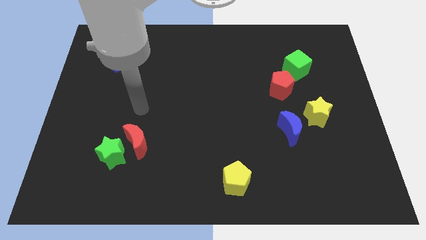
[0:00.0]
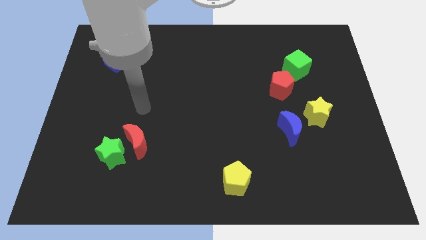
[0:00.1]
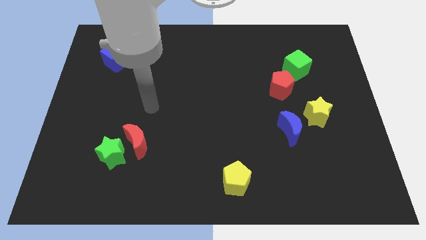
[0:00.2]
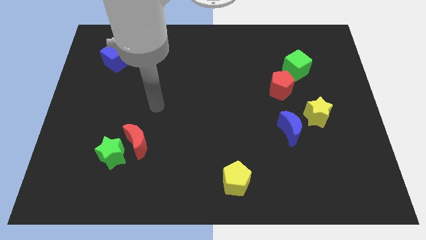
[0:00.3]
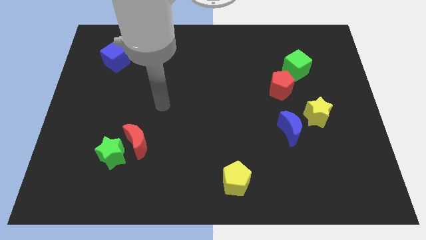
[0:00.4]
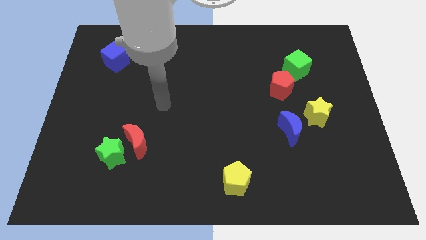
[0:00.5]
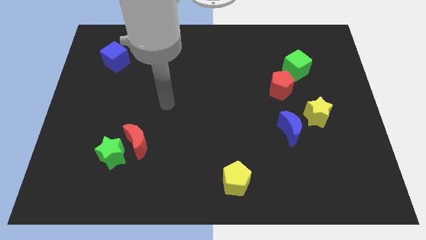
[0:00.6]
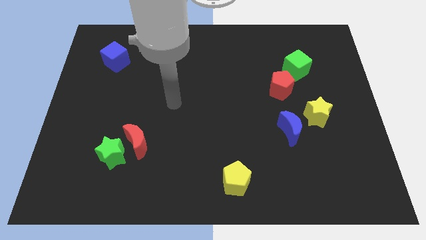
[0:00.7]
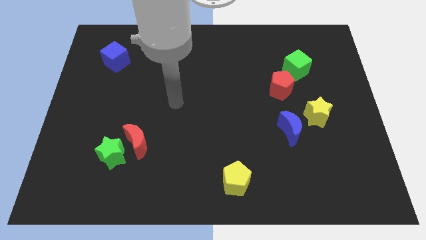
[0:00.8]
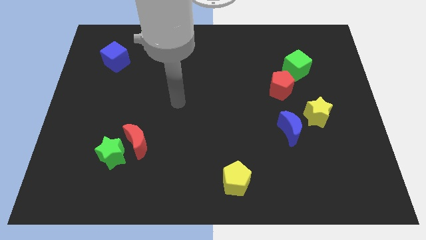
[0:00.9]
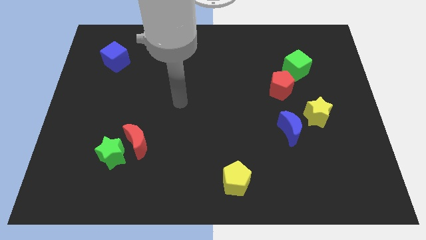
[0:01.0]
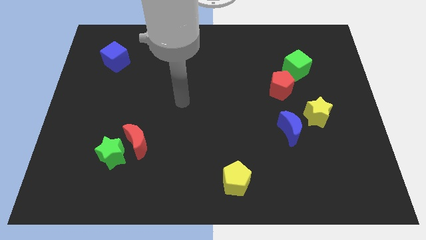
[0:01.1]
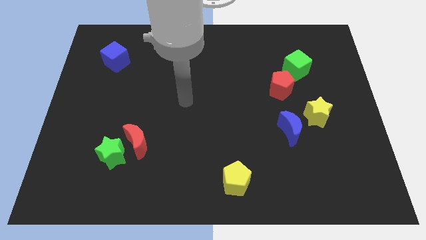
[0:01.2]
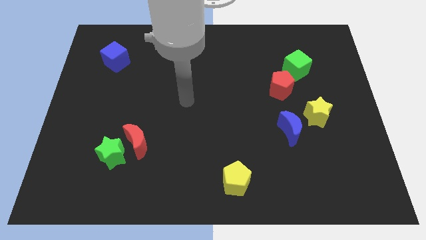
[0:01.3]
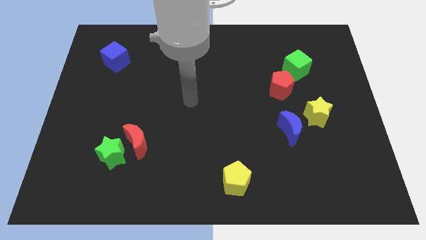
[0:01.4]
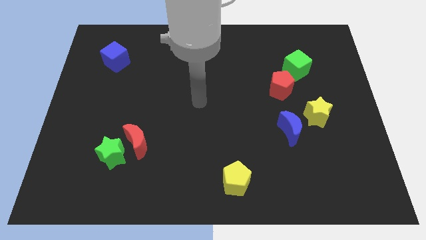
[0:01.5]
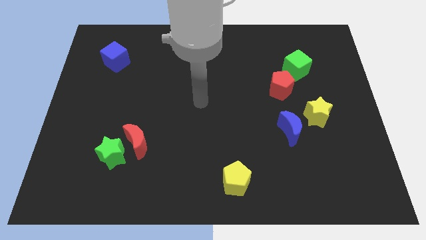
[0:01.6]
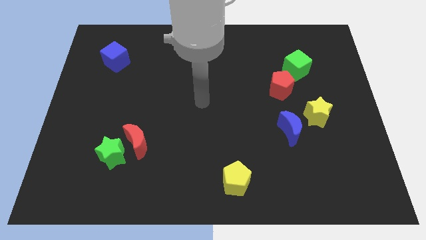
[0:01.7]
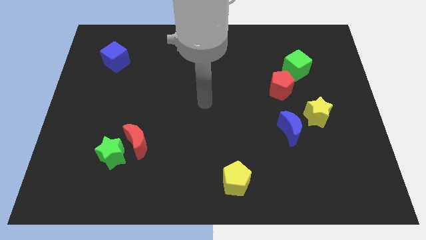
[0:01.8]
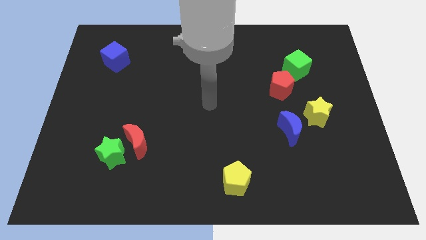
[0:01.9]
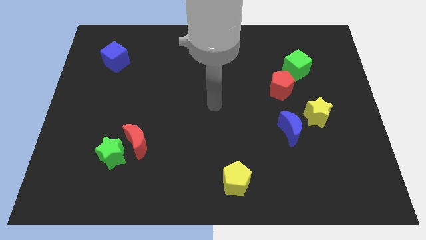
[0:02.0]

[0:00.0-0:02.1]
move your arm to the center of the board

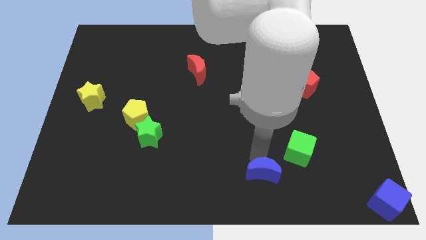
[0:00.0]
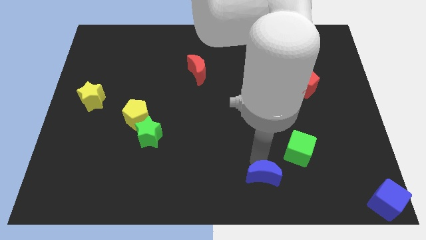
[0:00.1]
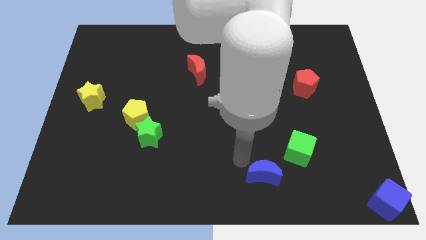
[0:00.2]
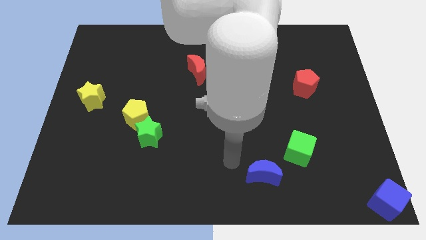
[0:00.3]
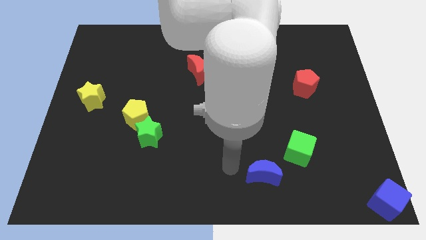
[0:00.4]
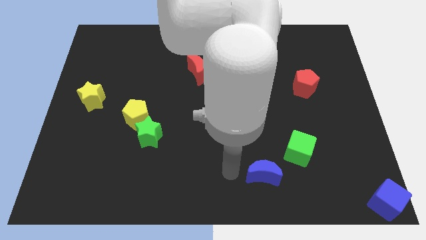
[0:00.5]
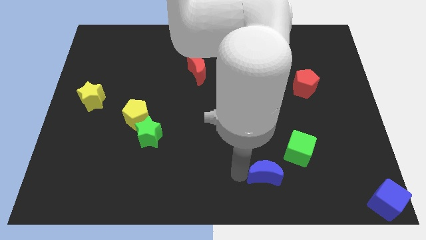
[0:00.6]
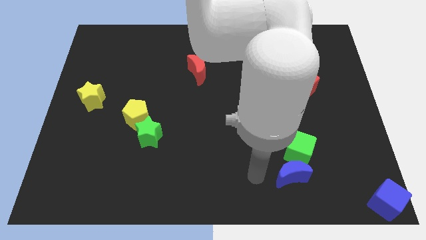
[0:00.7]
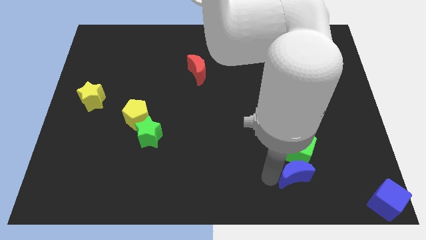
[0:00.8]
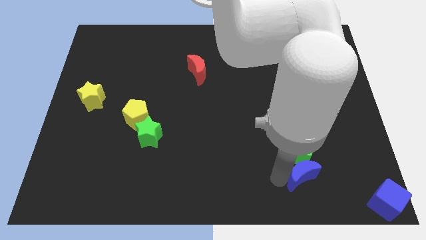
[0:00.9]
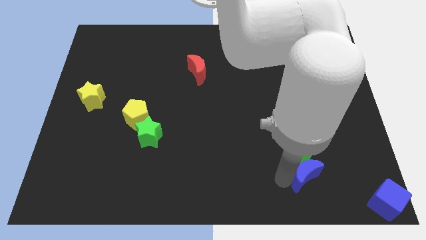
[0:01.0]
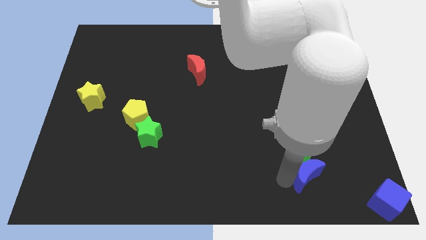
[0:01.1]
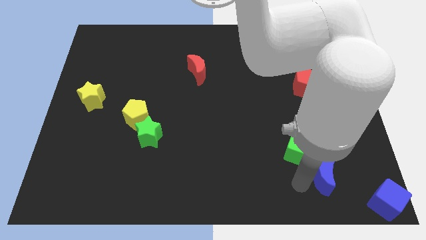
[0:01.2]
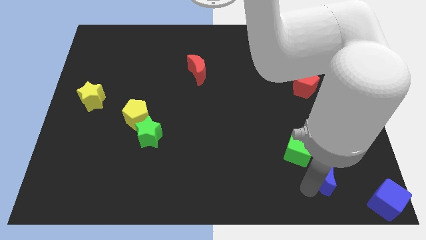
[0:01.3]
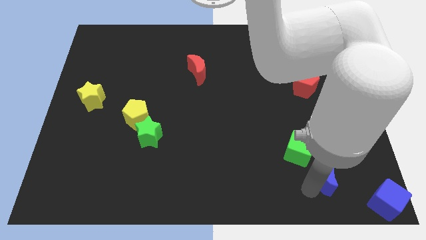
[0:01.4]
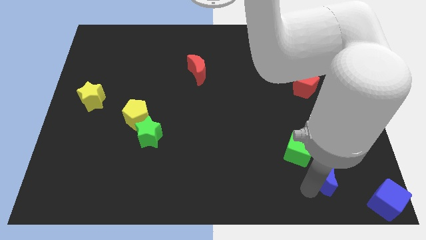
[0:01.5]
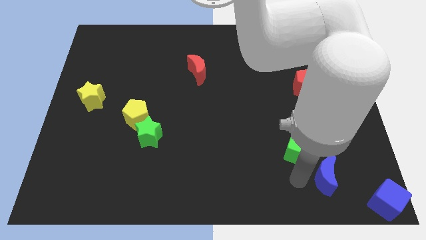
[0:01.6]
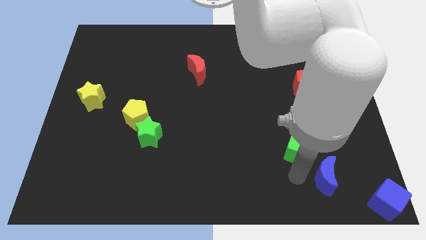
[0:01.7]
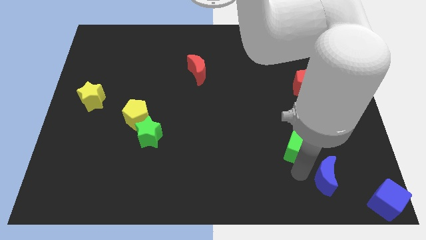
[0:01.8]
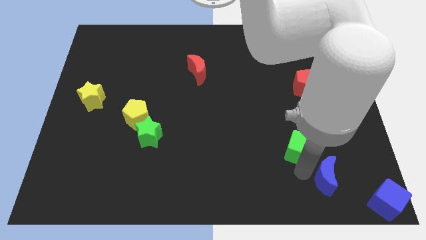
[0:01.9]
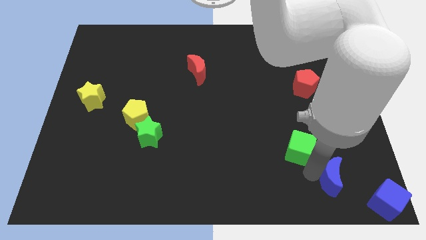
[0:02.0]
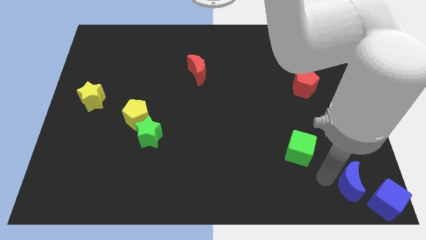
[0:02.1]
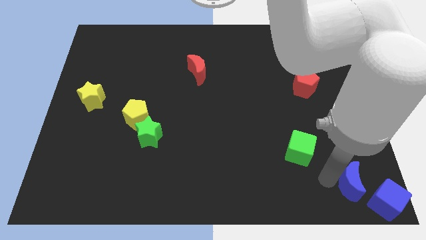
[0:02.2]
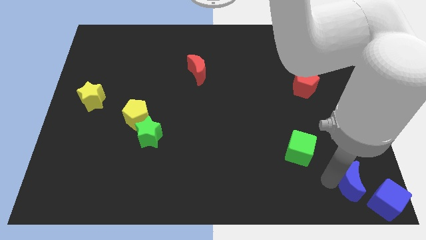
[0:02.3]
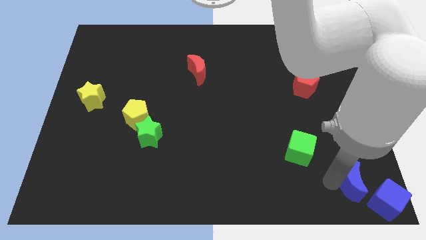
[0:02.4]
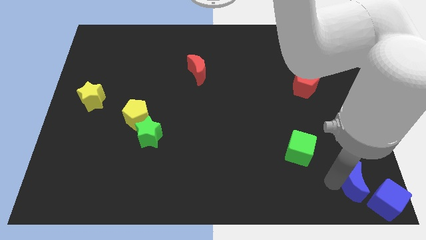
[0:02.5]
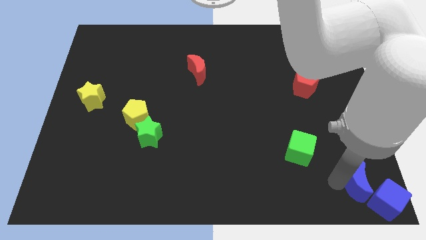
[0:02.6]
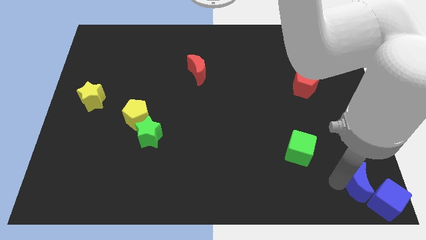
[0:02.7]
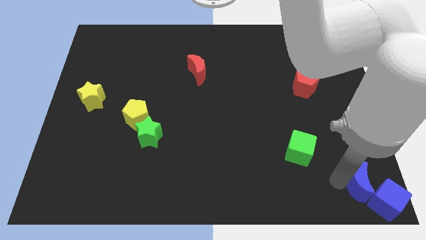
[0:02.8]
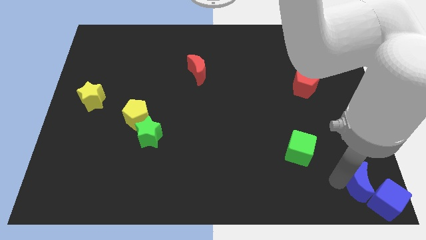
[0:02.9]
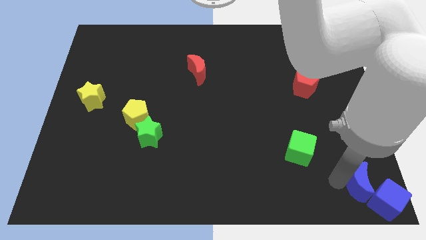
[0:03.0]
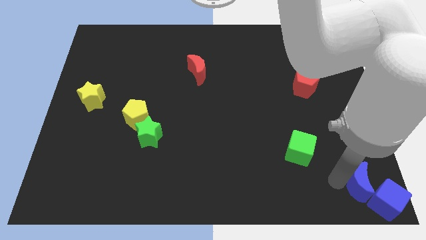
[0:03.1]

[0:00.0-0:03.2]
move blue moon towards blue cube

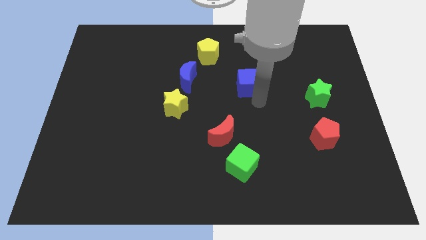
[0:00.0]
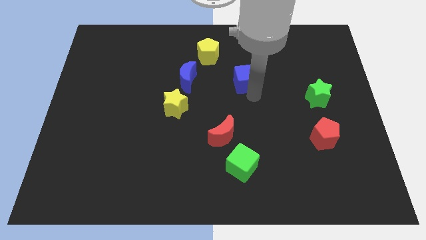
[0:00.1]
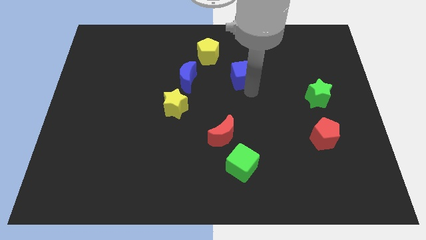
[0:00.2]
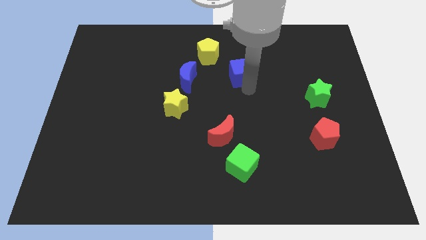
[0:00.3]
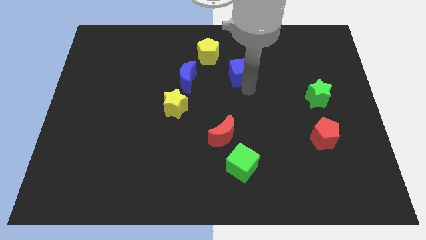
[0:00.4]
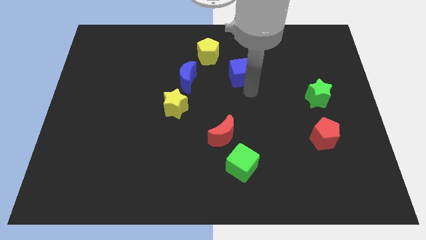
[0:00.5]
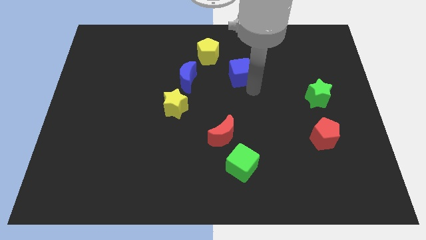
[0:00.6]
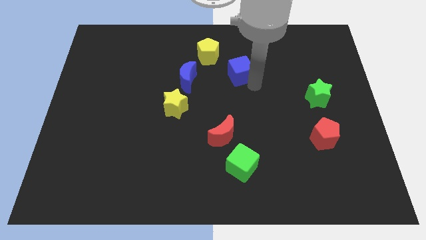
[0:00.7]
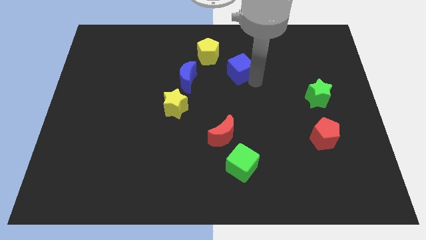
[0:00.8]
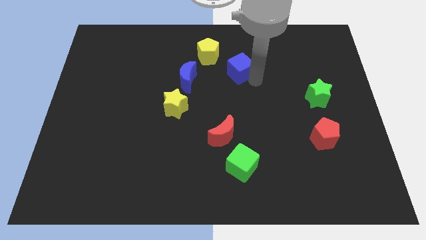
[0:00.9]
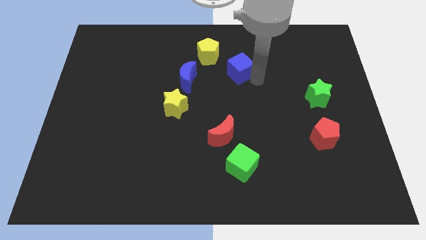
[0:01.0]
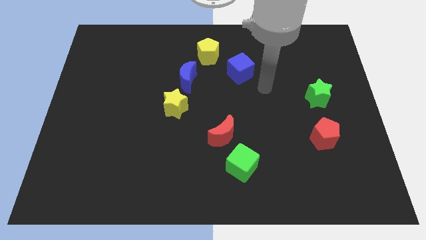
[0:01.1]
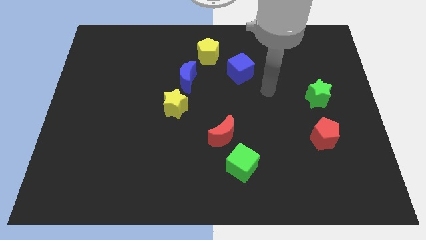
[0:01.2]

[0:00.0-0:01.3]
push the blue cube towards the yellow pentagon

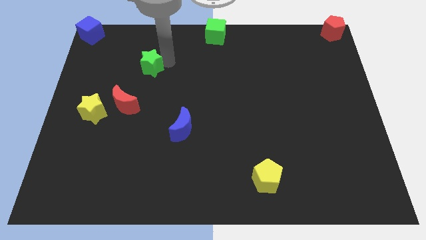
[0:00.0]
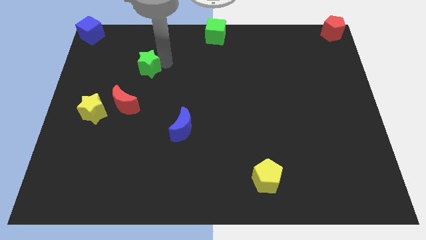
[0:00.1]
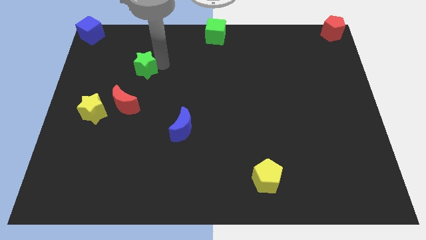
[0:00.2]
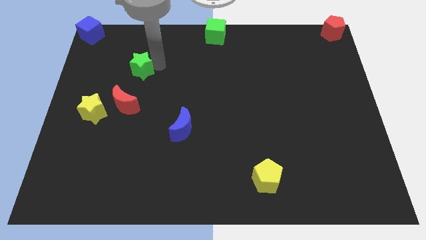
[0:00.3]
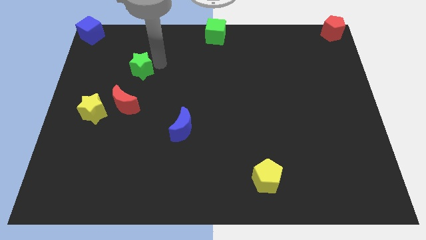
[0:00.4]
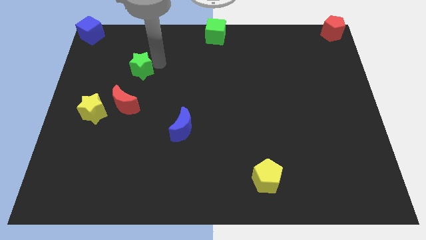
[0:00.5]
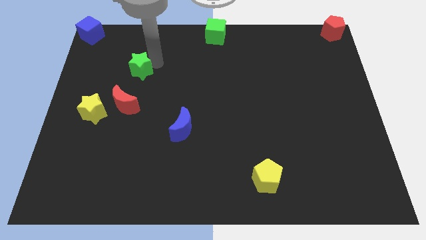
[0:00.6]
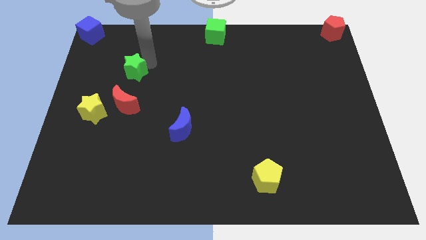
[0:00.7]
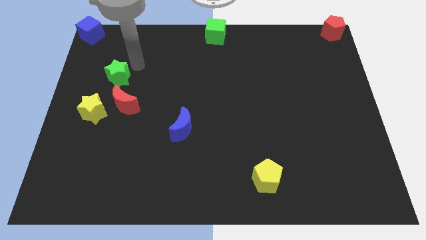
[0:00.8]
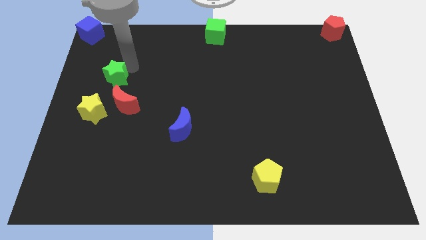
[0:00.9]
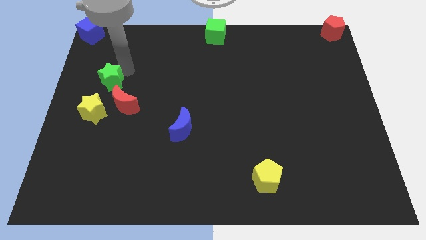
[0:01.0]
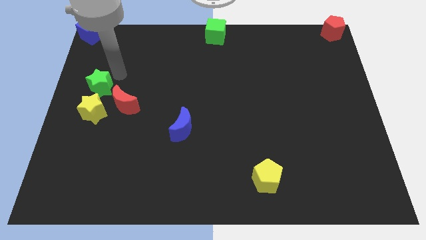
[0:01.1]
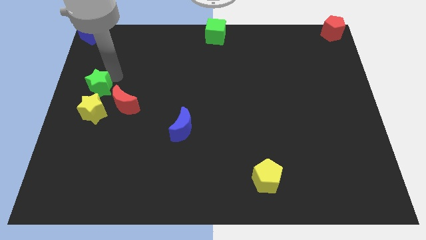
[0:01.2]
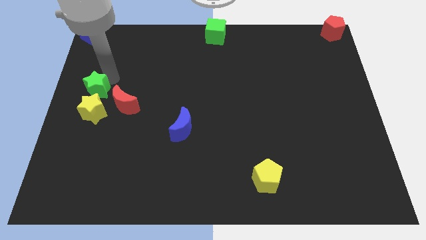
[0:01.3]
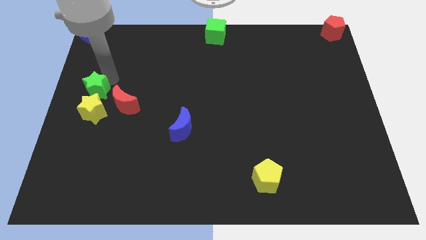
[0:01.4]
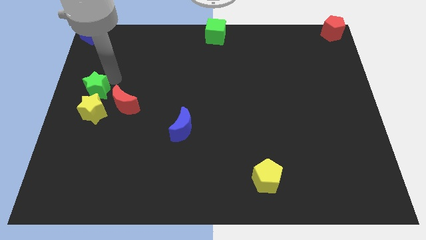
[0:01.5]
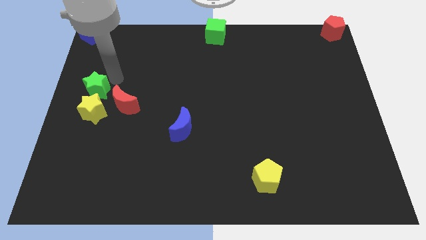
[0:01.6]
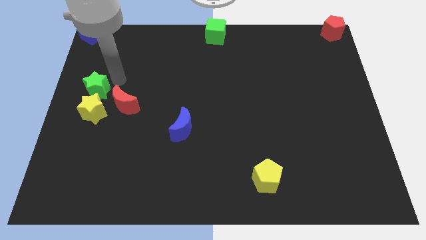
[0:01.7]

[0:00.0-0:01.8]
place the green star above the yellow star

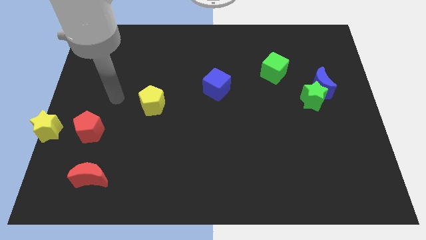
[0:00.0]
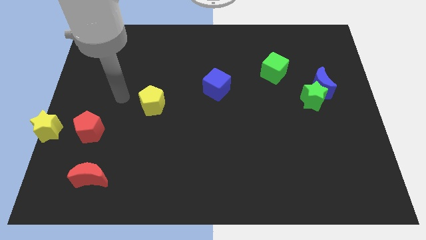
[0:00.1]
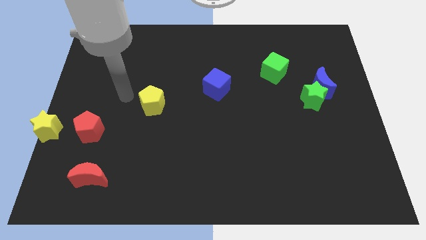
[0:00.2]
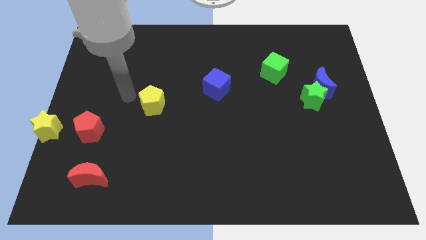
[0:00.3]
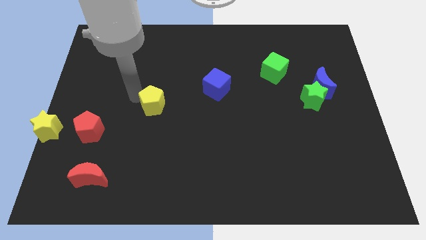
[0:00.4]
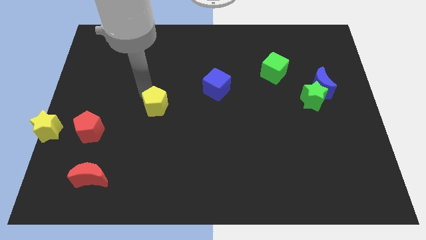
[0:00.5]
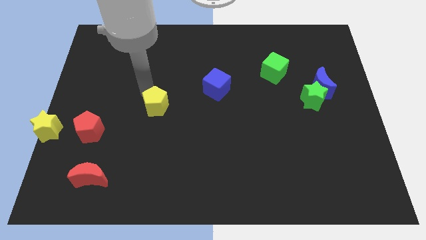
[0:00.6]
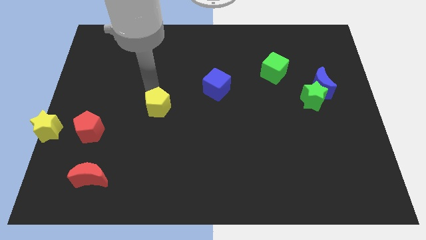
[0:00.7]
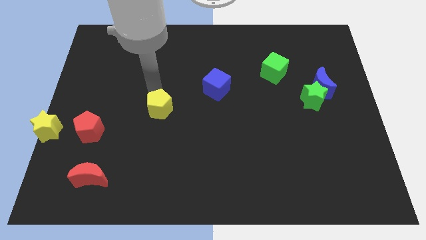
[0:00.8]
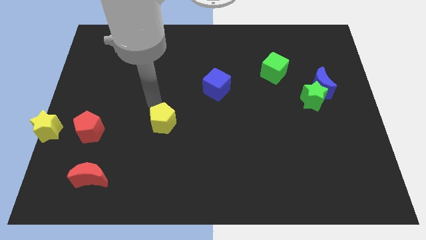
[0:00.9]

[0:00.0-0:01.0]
push yellow pentagon slightly downwards
